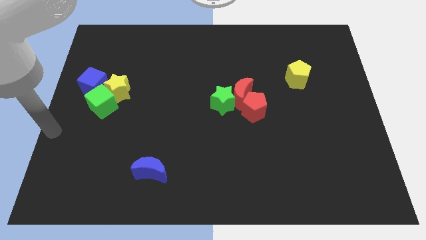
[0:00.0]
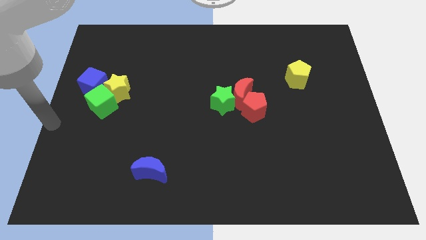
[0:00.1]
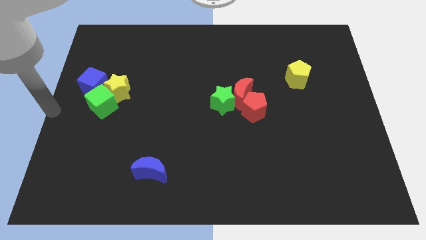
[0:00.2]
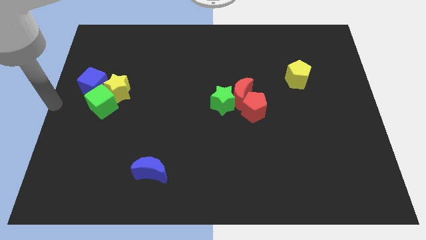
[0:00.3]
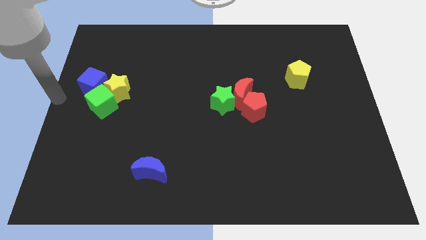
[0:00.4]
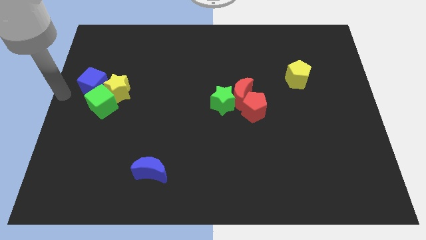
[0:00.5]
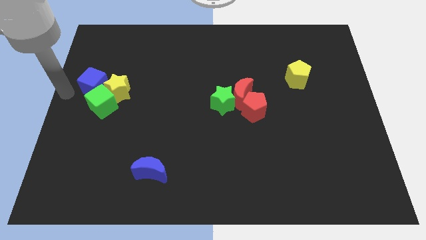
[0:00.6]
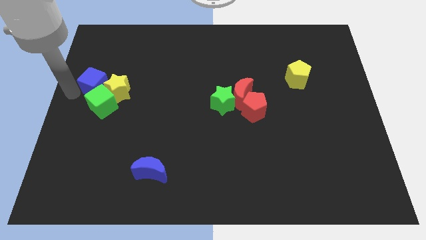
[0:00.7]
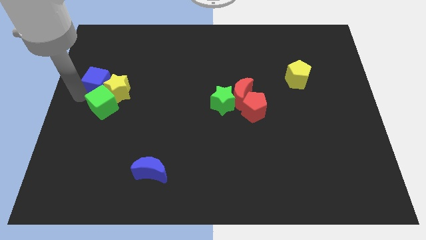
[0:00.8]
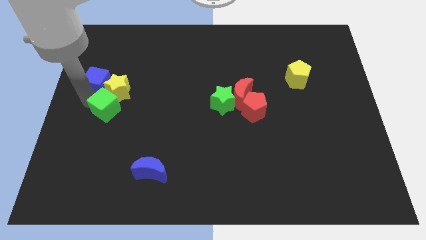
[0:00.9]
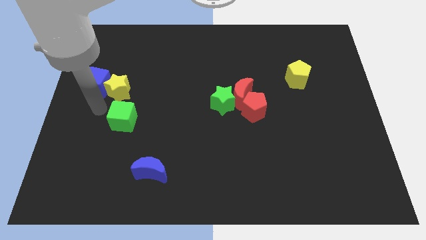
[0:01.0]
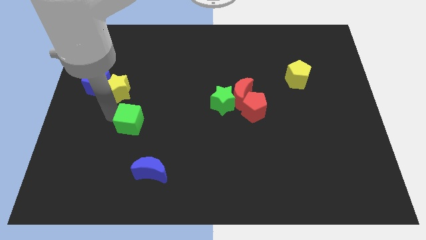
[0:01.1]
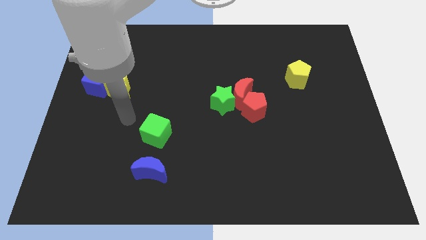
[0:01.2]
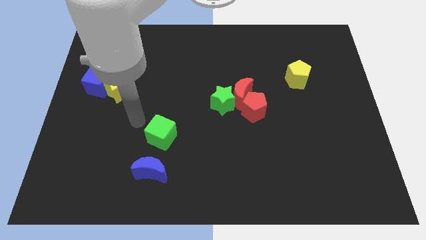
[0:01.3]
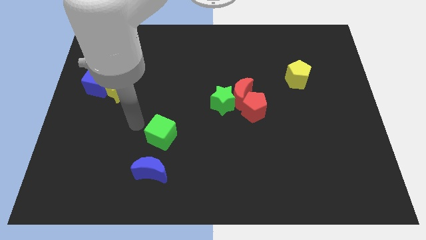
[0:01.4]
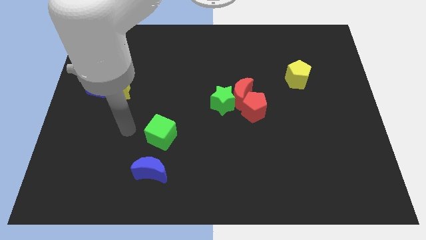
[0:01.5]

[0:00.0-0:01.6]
separate the green cube from the group of blocks

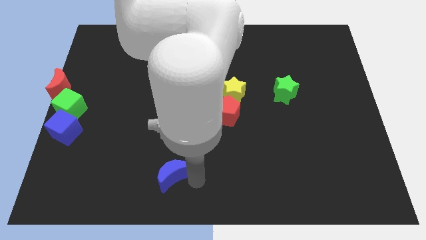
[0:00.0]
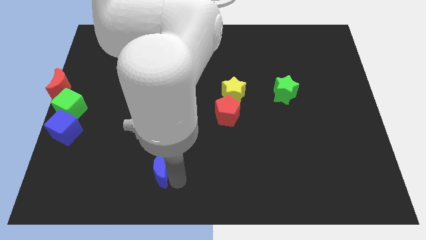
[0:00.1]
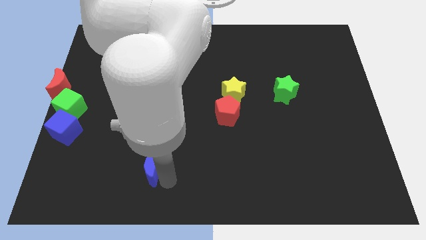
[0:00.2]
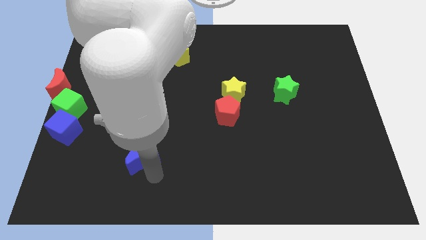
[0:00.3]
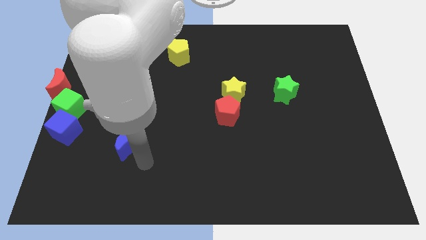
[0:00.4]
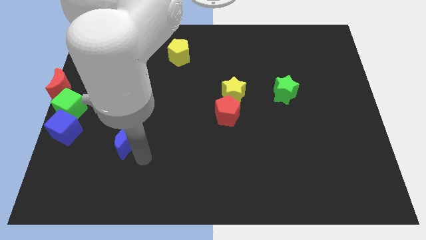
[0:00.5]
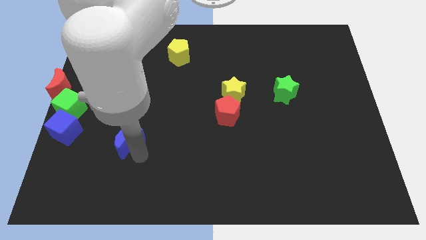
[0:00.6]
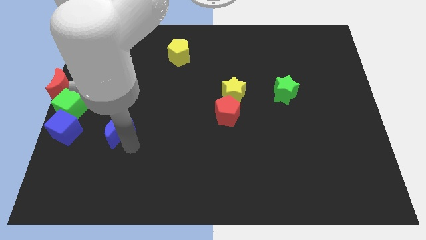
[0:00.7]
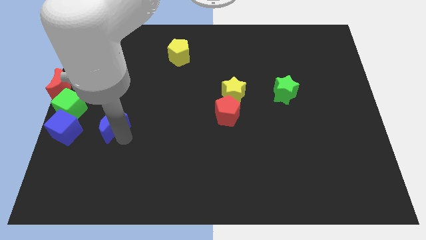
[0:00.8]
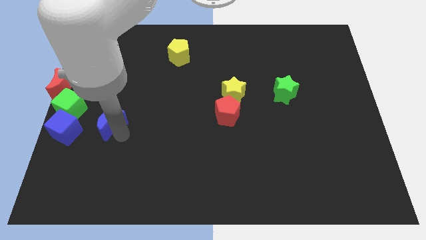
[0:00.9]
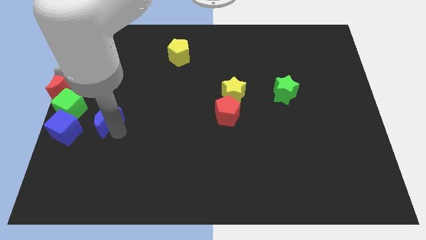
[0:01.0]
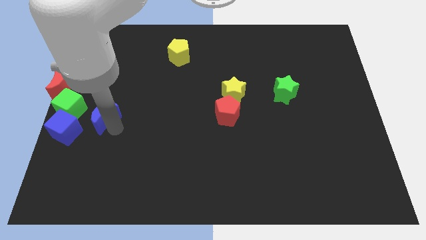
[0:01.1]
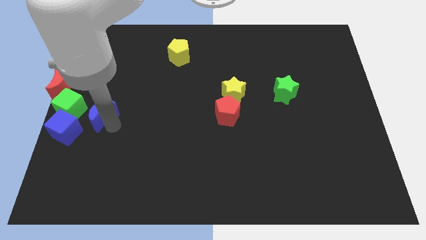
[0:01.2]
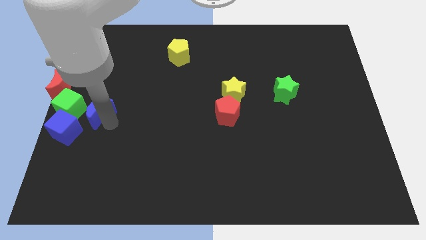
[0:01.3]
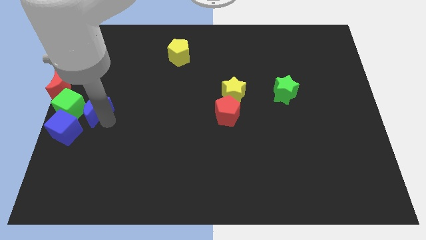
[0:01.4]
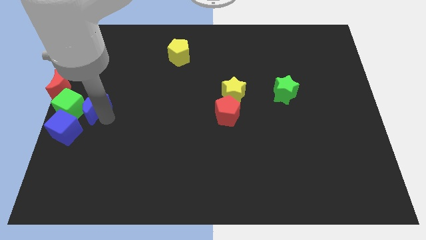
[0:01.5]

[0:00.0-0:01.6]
make the blue crescent to touch the right side of the green cube

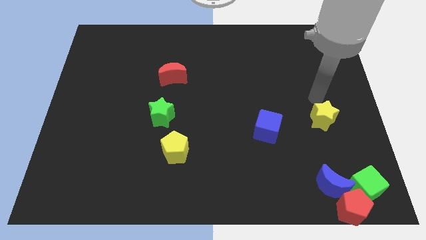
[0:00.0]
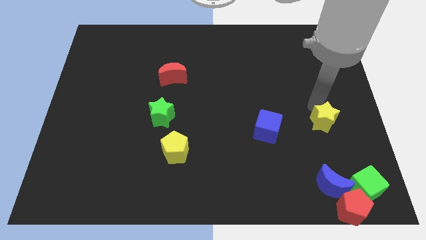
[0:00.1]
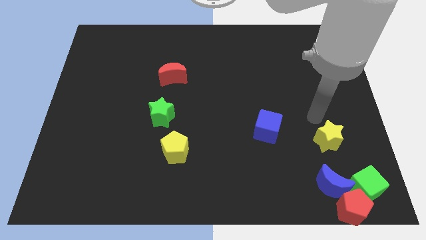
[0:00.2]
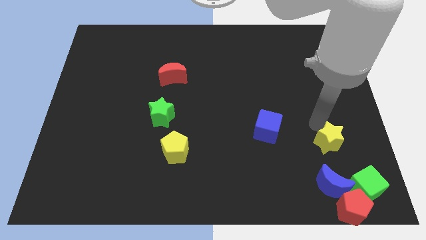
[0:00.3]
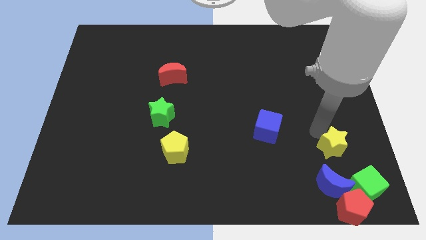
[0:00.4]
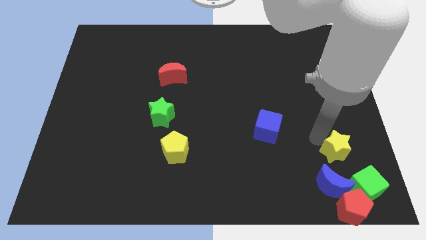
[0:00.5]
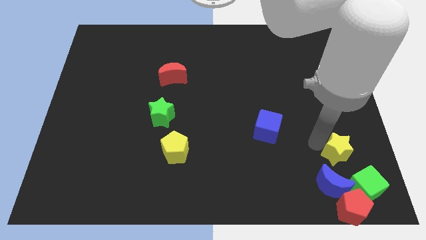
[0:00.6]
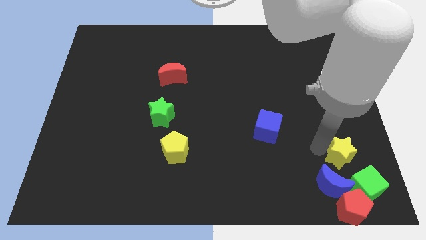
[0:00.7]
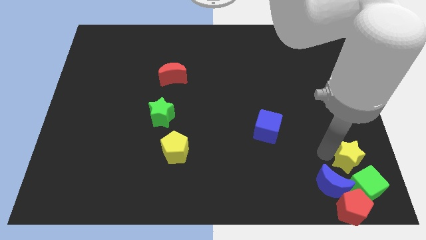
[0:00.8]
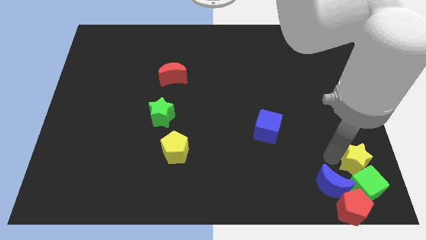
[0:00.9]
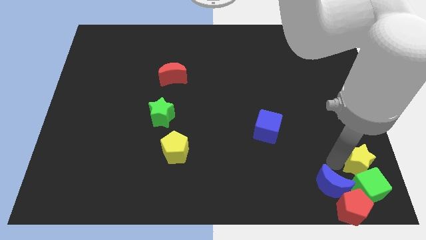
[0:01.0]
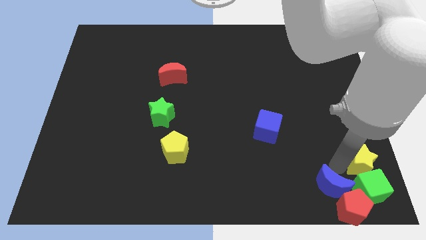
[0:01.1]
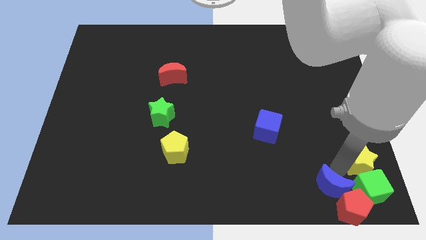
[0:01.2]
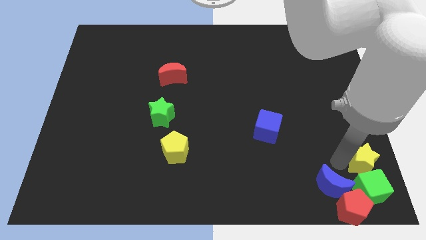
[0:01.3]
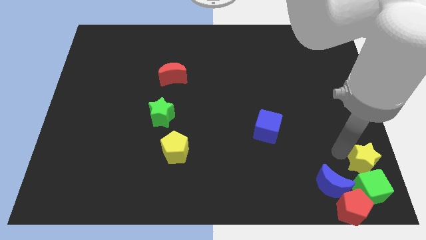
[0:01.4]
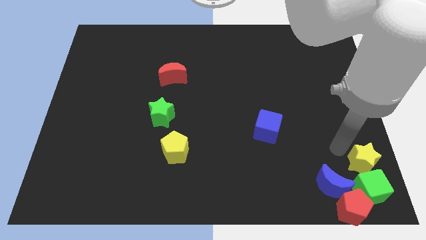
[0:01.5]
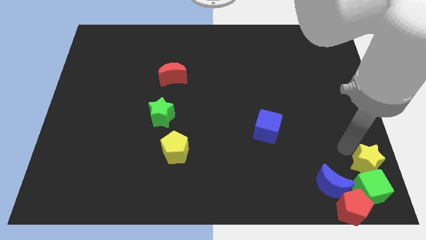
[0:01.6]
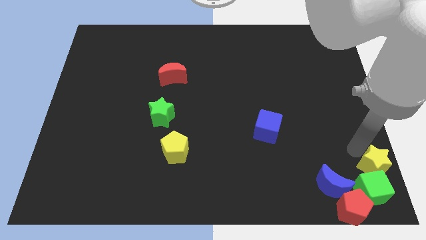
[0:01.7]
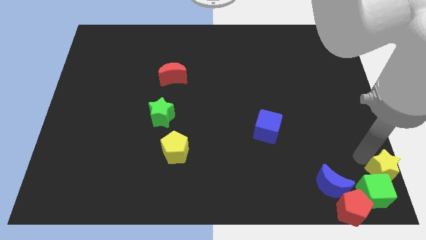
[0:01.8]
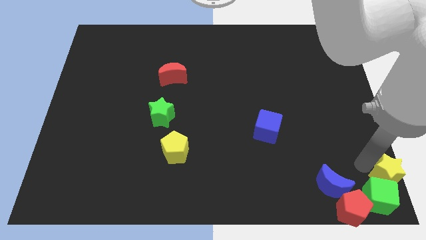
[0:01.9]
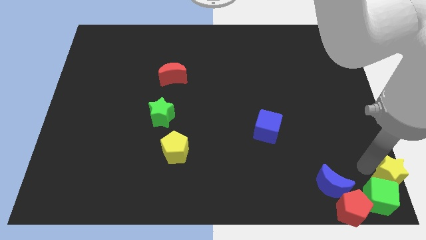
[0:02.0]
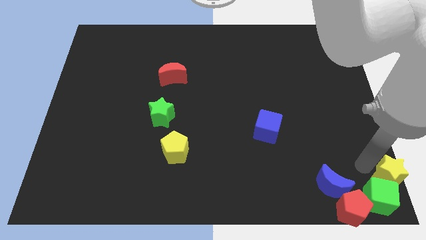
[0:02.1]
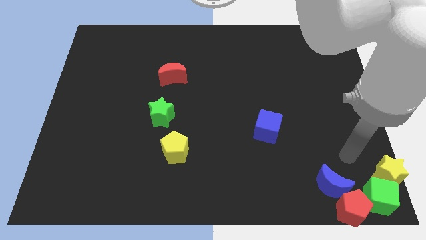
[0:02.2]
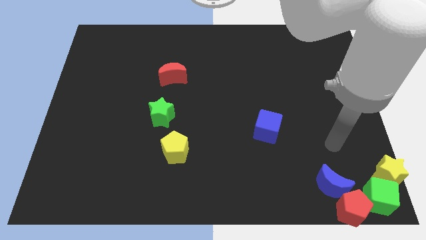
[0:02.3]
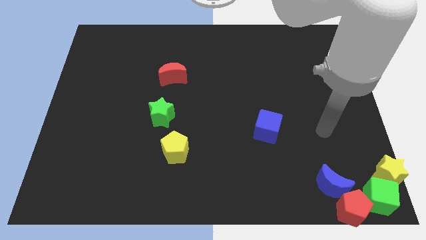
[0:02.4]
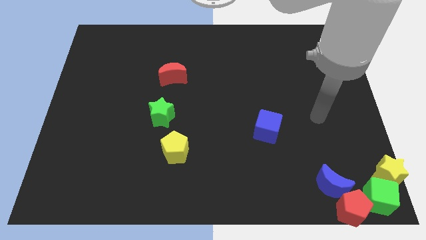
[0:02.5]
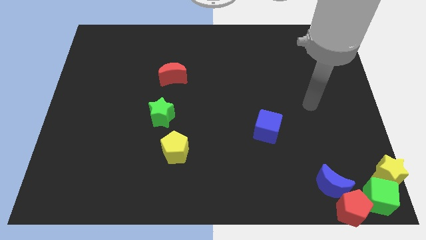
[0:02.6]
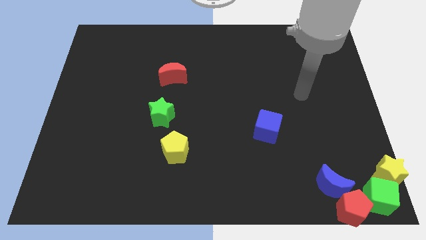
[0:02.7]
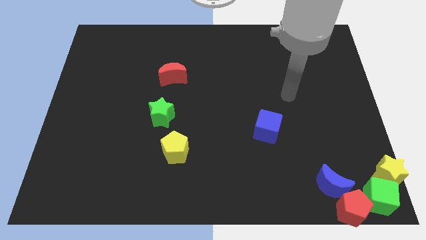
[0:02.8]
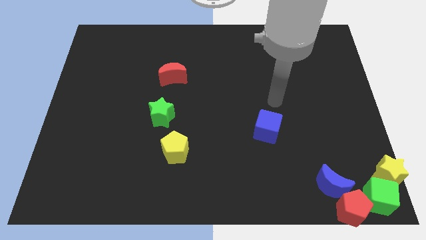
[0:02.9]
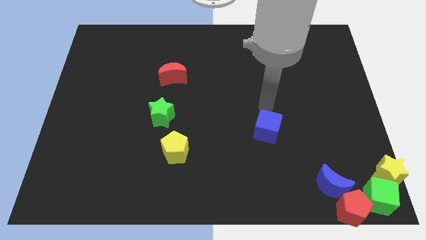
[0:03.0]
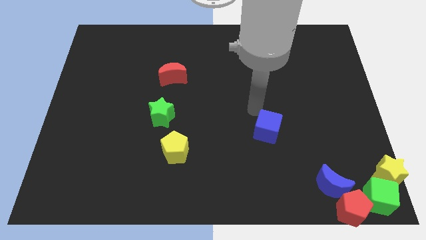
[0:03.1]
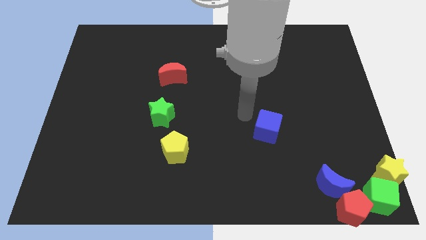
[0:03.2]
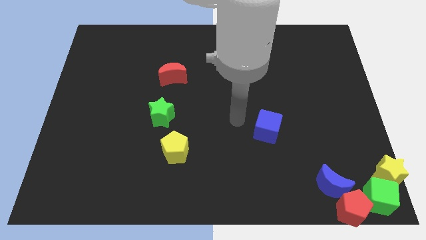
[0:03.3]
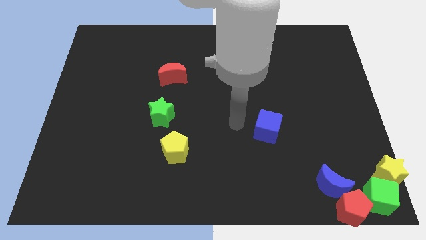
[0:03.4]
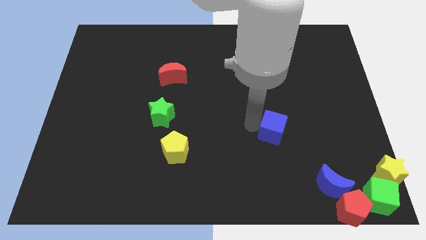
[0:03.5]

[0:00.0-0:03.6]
place yellow star on top of the green cube at bottom right corner

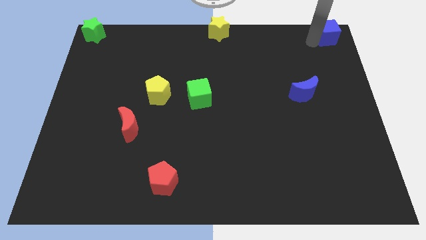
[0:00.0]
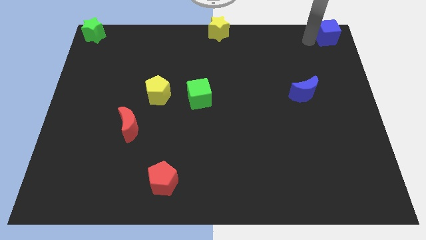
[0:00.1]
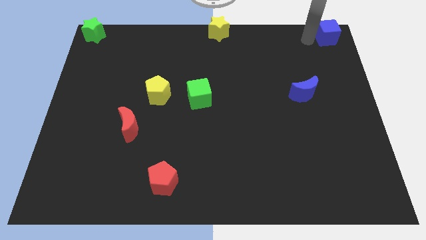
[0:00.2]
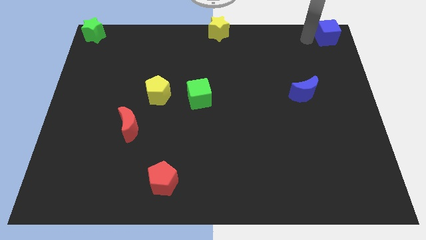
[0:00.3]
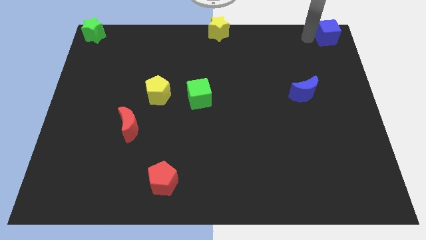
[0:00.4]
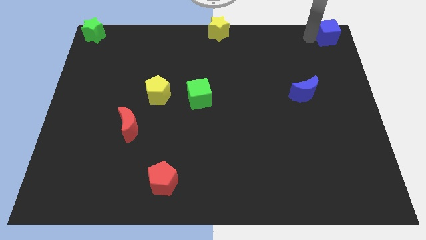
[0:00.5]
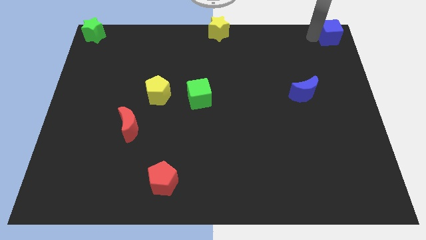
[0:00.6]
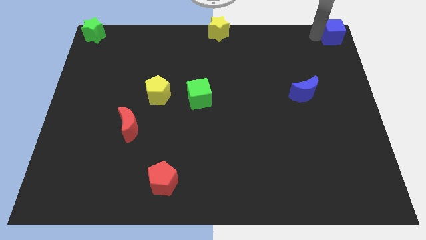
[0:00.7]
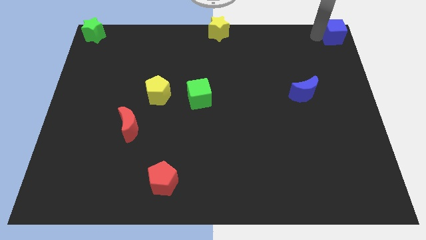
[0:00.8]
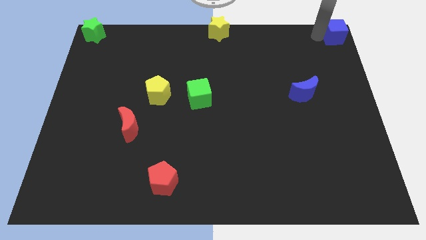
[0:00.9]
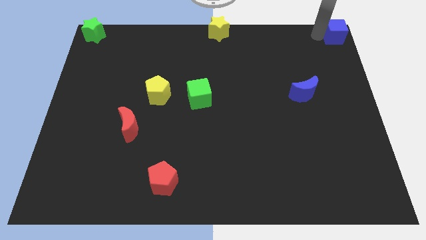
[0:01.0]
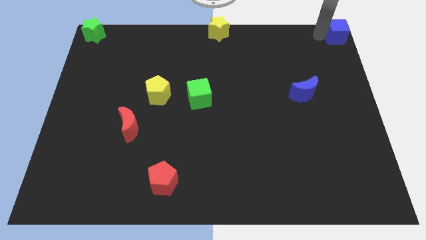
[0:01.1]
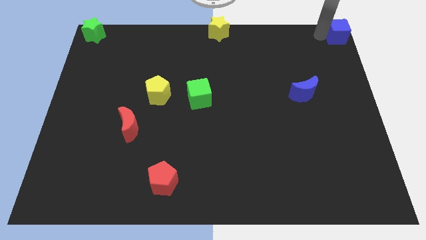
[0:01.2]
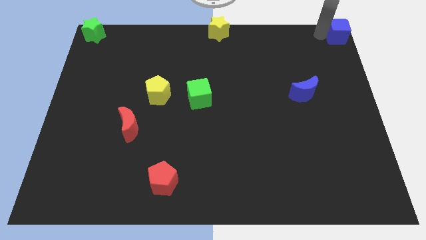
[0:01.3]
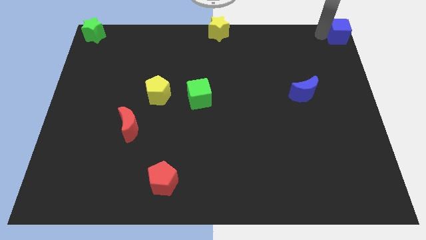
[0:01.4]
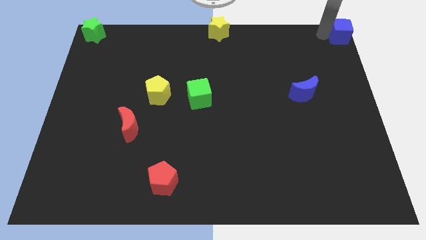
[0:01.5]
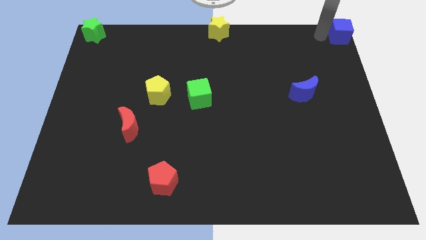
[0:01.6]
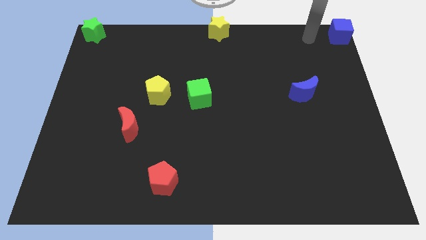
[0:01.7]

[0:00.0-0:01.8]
move the blue cube to the top right corner of the board

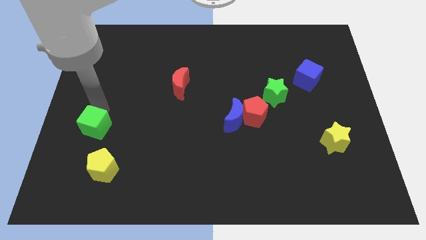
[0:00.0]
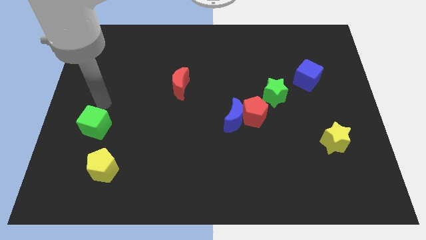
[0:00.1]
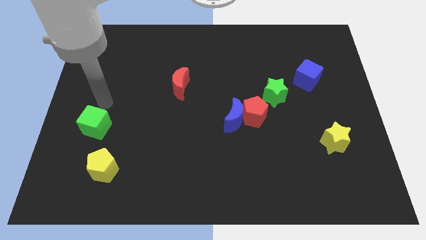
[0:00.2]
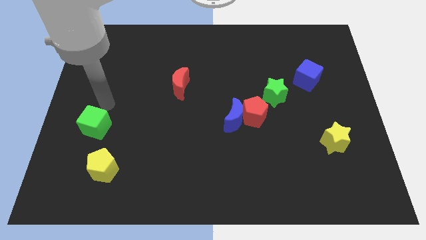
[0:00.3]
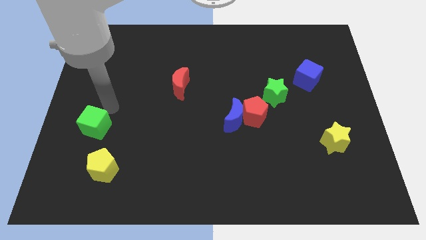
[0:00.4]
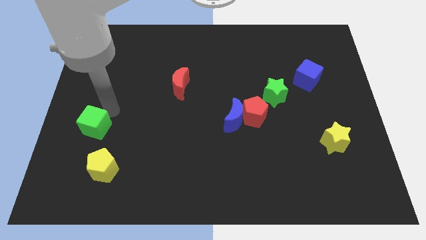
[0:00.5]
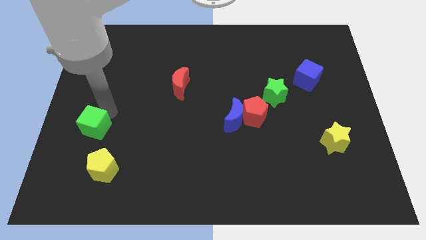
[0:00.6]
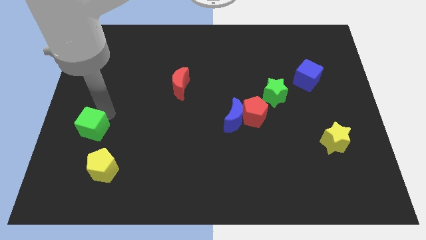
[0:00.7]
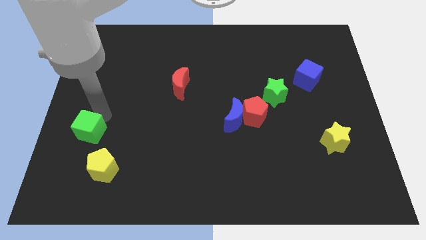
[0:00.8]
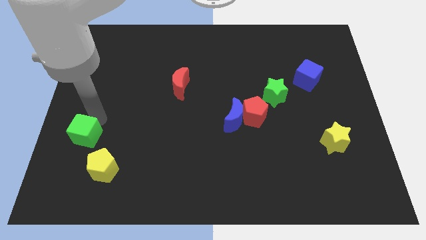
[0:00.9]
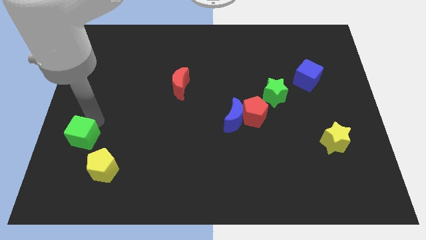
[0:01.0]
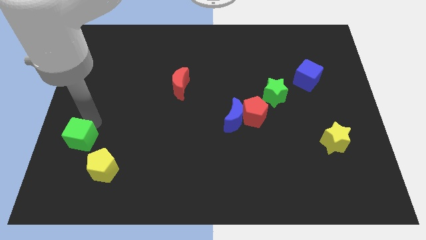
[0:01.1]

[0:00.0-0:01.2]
push green cube slightly towards down
